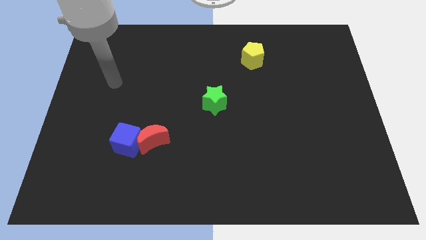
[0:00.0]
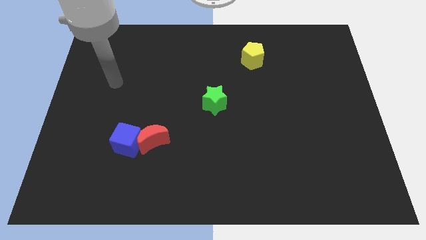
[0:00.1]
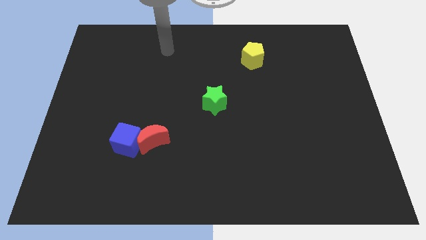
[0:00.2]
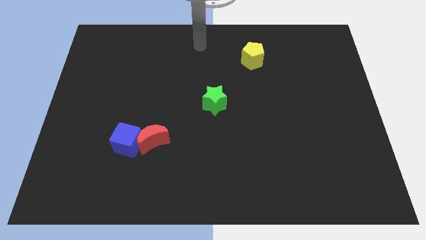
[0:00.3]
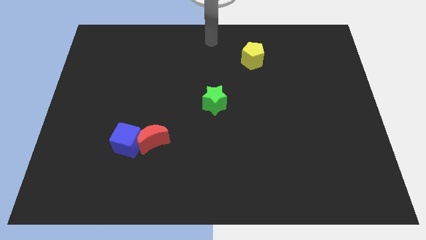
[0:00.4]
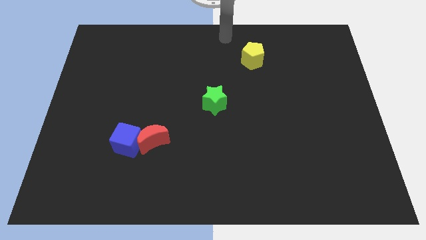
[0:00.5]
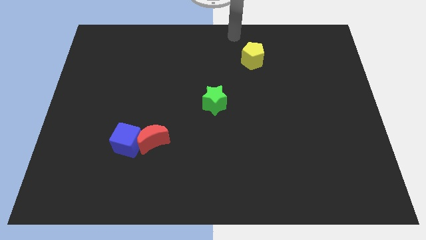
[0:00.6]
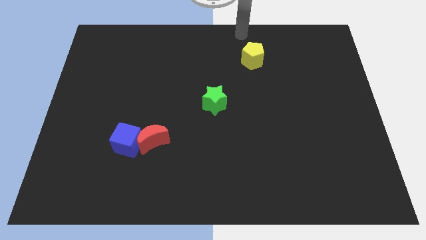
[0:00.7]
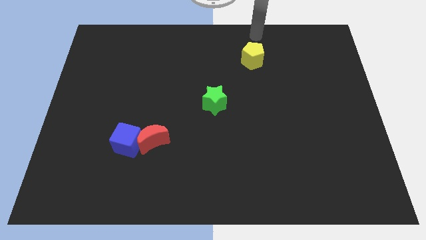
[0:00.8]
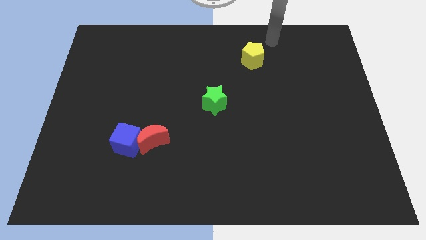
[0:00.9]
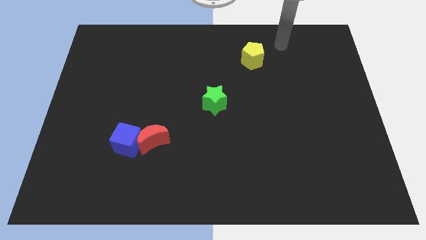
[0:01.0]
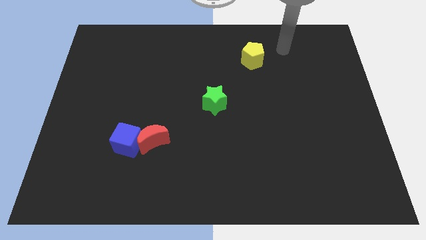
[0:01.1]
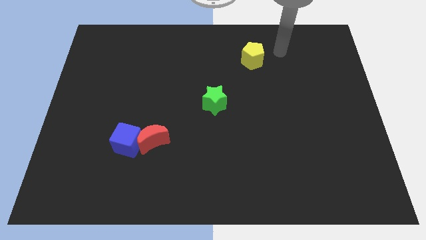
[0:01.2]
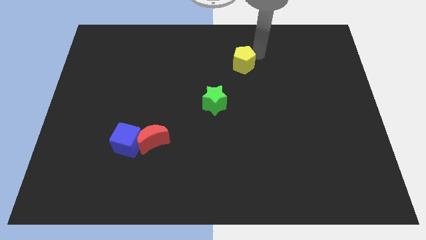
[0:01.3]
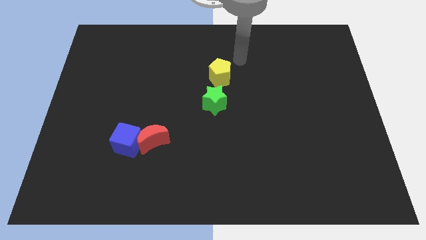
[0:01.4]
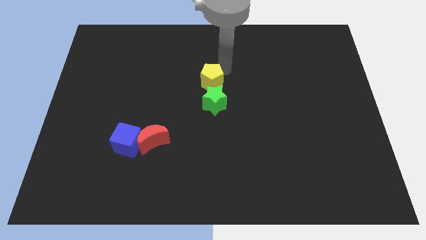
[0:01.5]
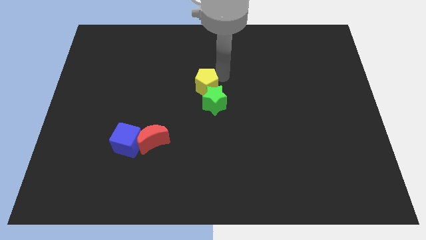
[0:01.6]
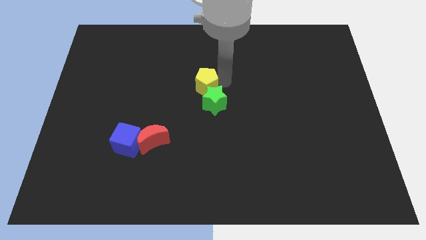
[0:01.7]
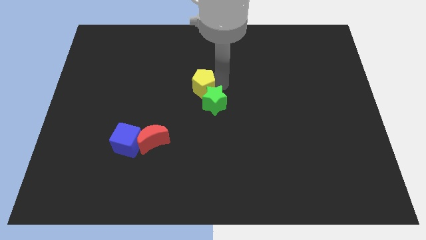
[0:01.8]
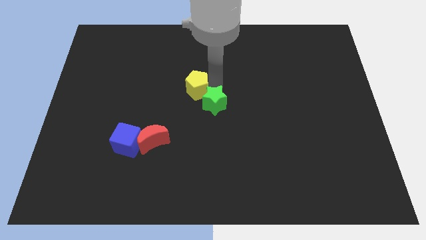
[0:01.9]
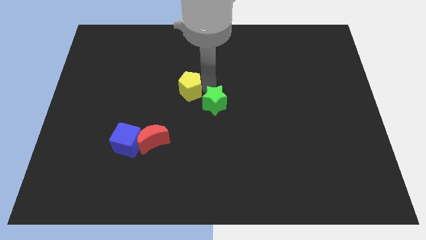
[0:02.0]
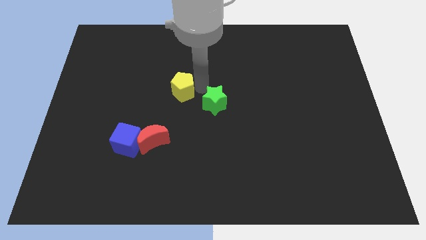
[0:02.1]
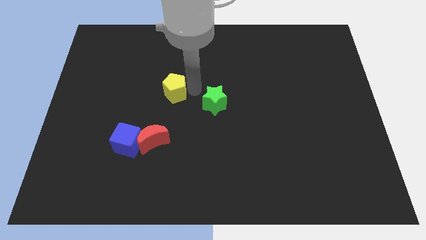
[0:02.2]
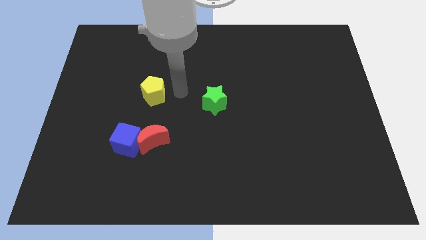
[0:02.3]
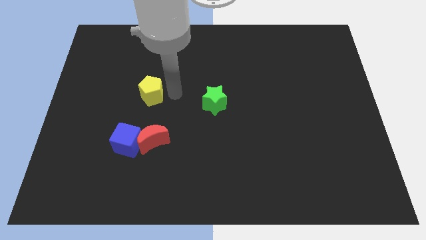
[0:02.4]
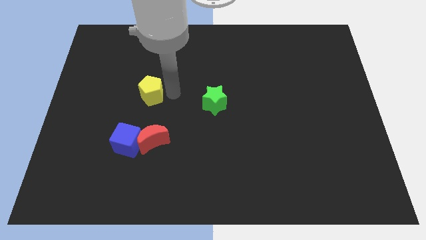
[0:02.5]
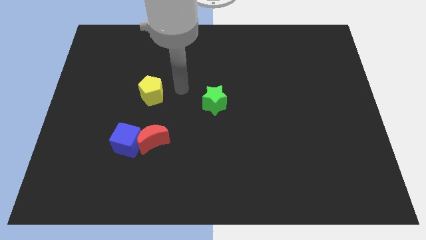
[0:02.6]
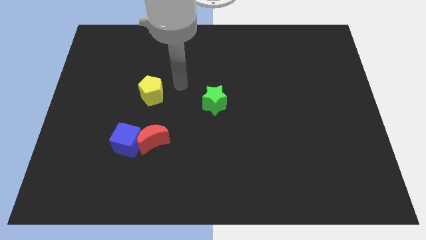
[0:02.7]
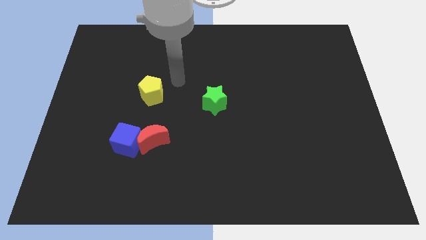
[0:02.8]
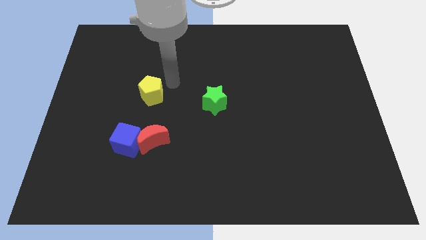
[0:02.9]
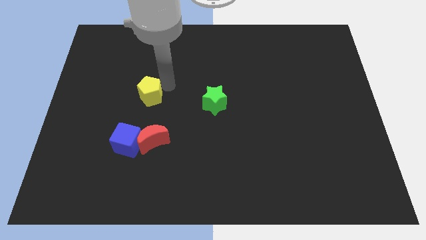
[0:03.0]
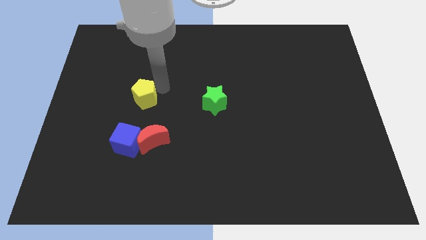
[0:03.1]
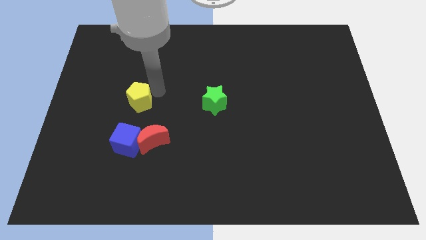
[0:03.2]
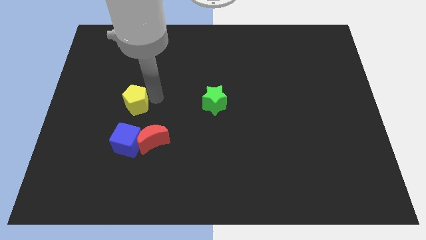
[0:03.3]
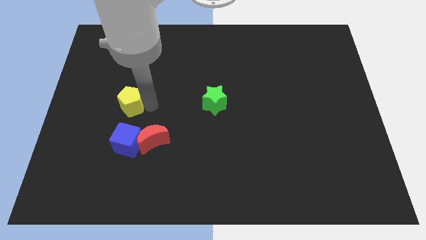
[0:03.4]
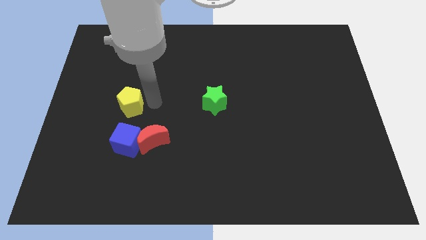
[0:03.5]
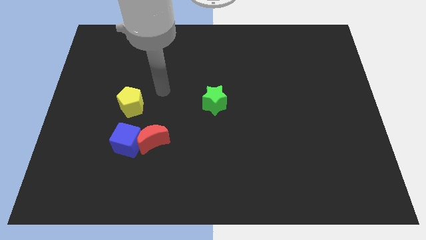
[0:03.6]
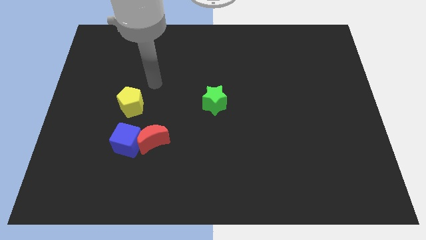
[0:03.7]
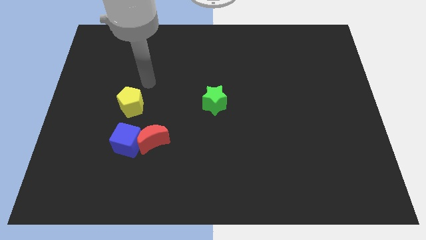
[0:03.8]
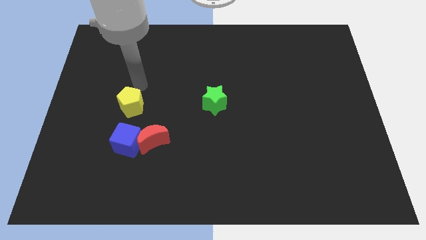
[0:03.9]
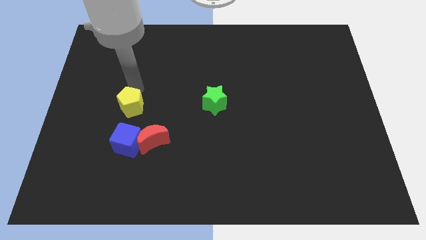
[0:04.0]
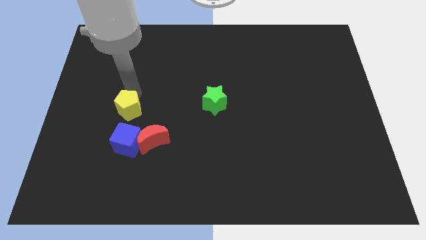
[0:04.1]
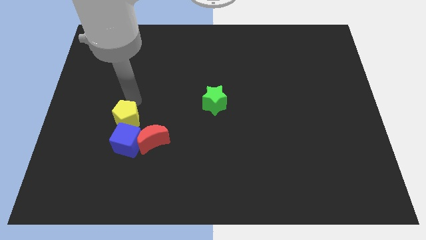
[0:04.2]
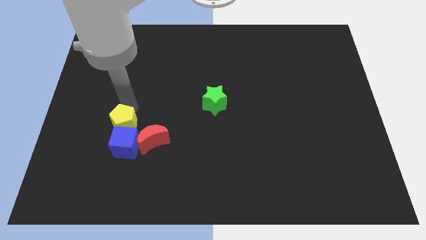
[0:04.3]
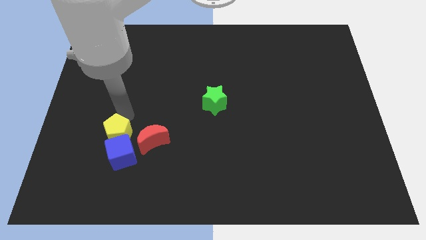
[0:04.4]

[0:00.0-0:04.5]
move the yellow pentagon close to the blue cube

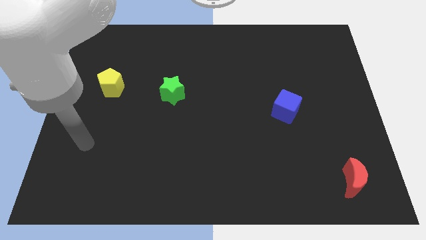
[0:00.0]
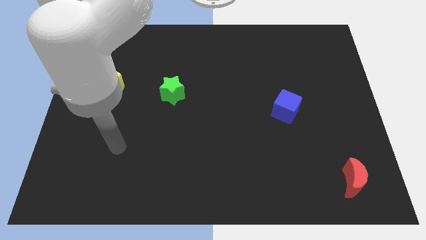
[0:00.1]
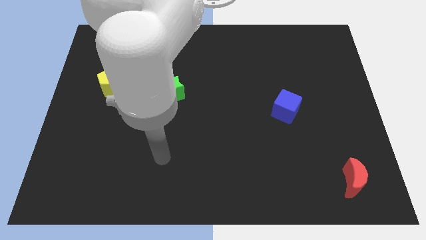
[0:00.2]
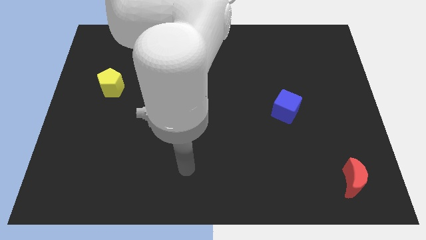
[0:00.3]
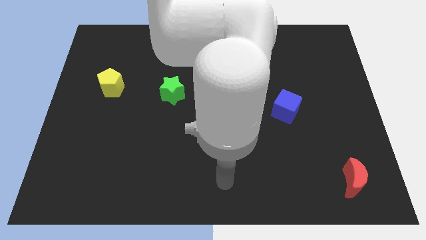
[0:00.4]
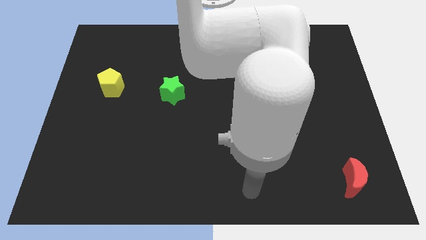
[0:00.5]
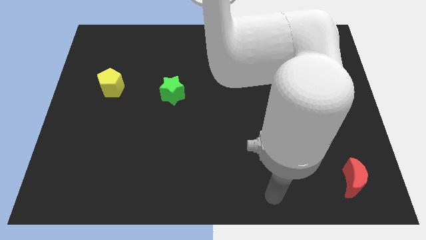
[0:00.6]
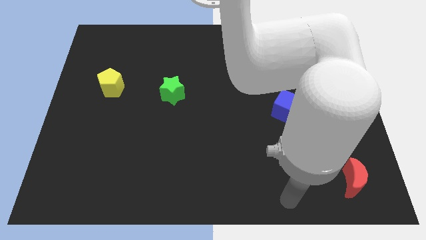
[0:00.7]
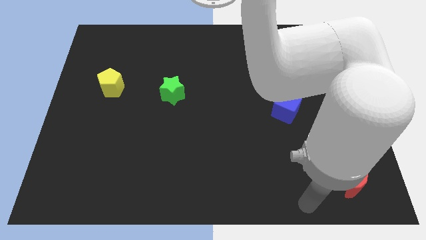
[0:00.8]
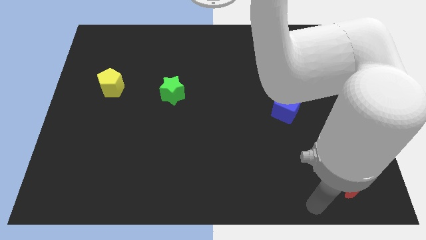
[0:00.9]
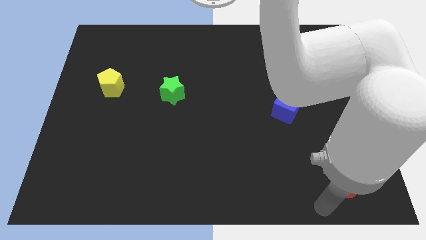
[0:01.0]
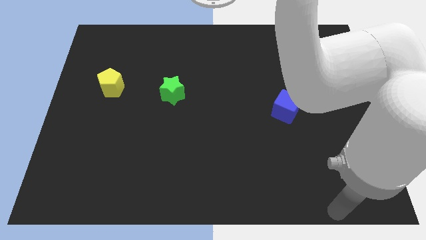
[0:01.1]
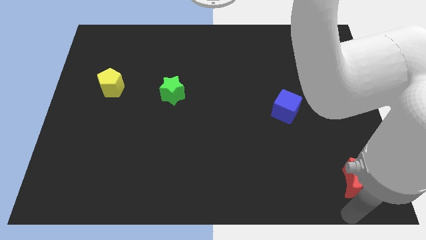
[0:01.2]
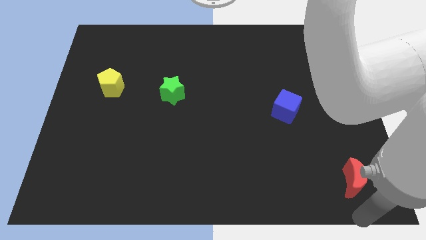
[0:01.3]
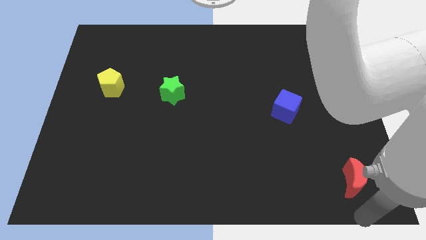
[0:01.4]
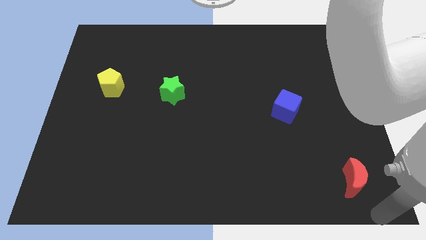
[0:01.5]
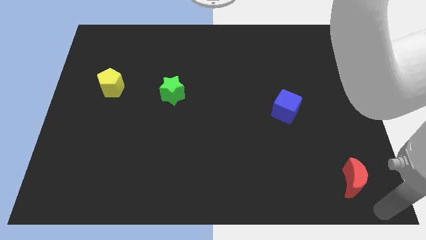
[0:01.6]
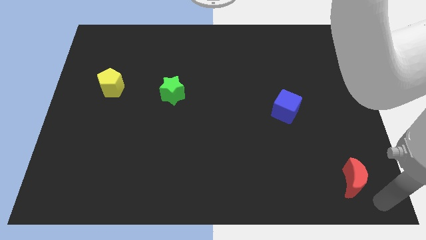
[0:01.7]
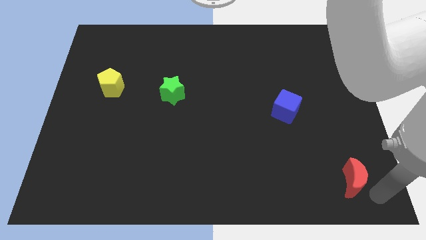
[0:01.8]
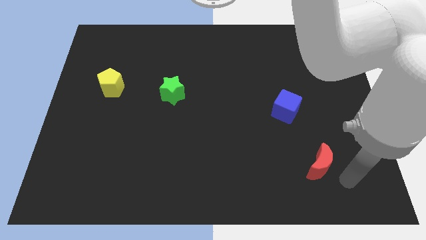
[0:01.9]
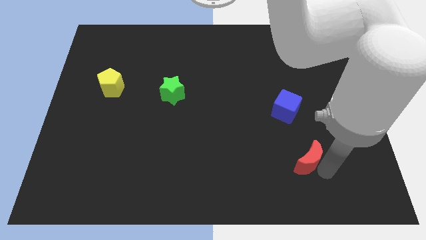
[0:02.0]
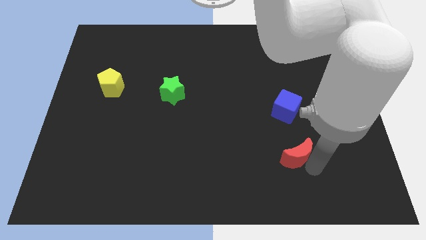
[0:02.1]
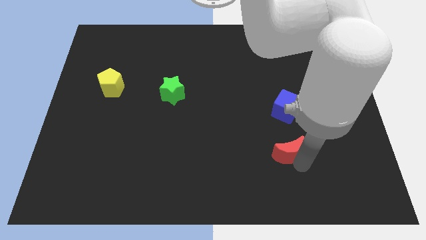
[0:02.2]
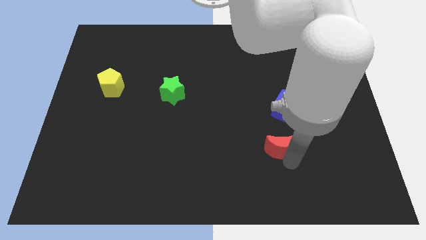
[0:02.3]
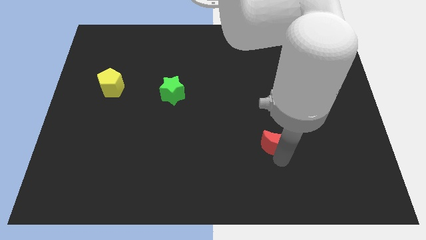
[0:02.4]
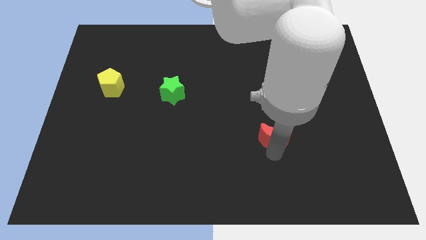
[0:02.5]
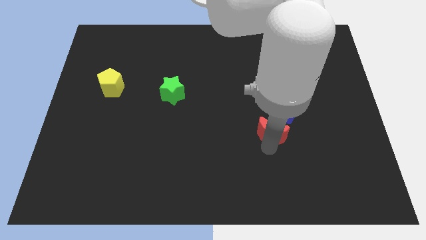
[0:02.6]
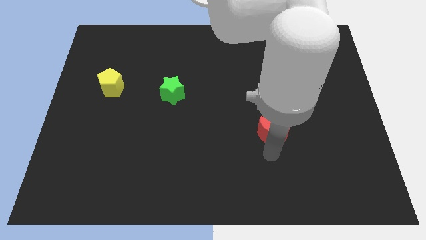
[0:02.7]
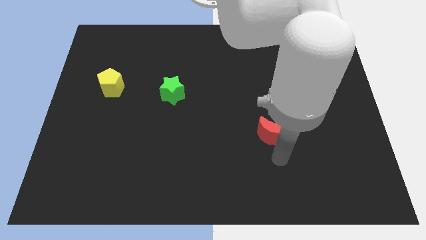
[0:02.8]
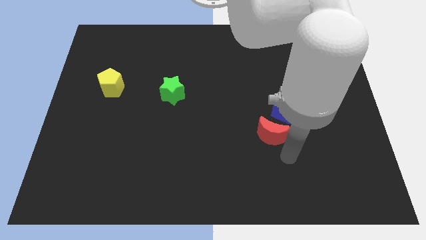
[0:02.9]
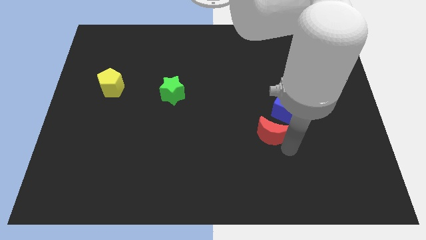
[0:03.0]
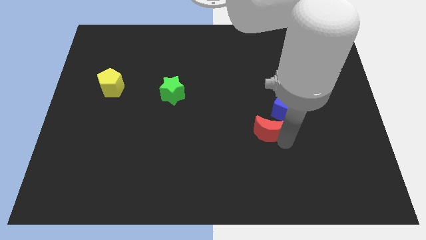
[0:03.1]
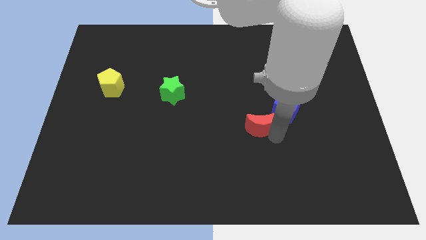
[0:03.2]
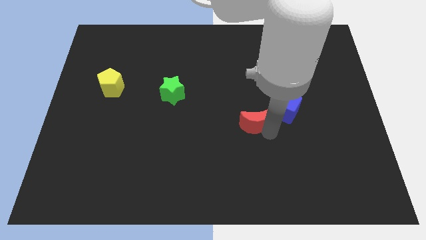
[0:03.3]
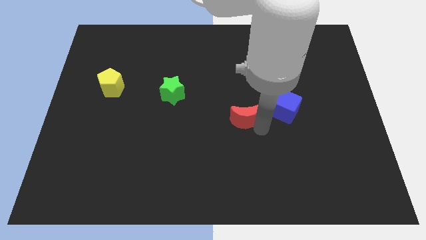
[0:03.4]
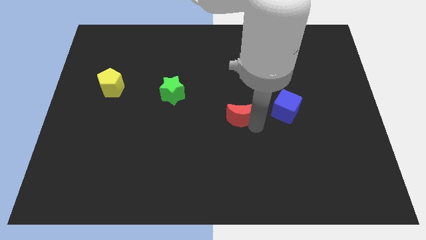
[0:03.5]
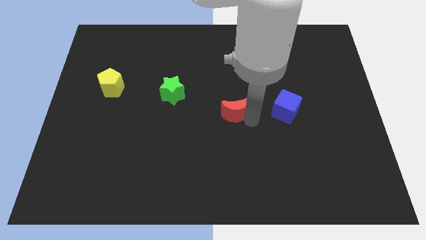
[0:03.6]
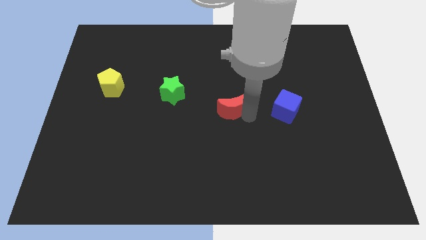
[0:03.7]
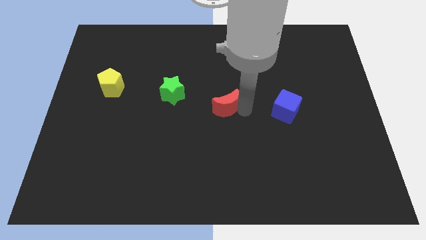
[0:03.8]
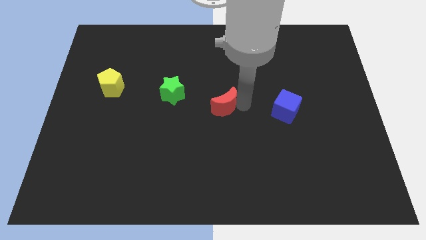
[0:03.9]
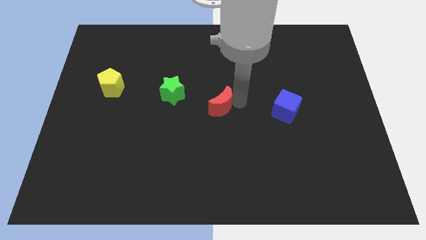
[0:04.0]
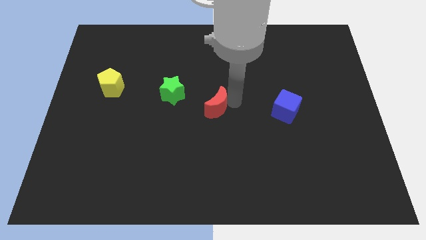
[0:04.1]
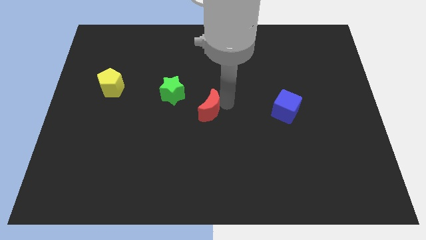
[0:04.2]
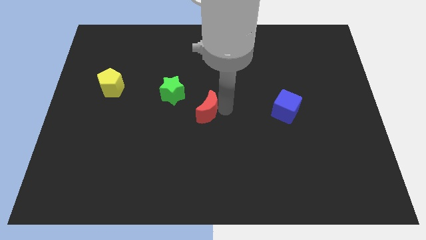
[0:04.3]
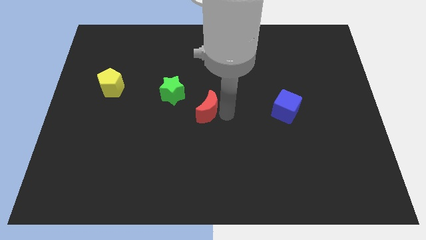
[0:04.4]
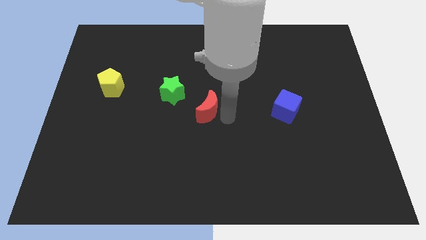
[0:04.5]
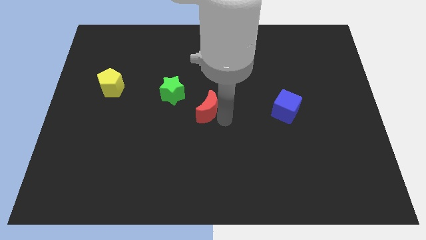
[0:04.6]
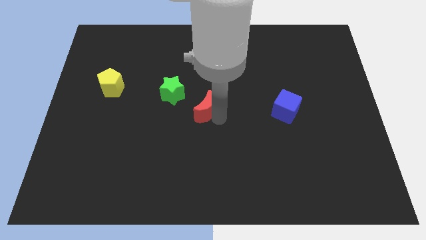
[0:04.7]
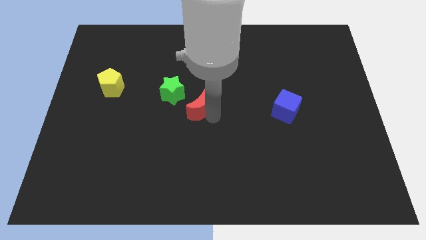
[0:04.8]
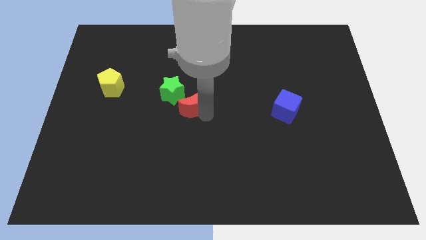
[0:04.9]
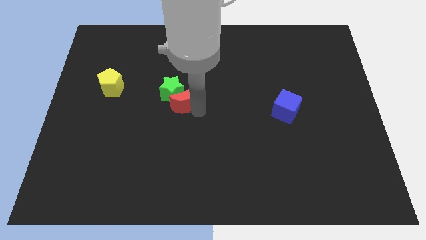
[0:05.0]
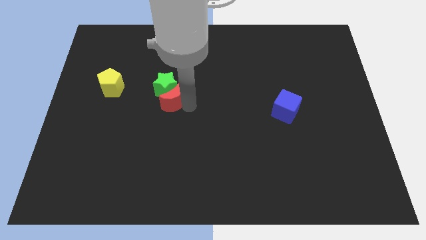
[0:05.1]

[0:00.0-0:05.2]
put the red moon to the green block
